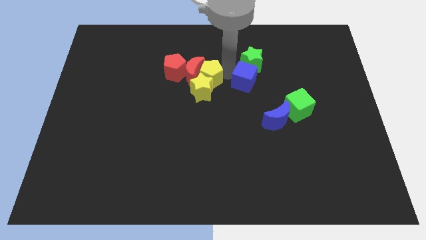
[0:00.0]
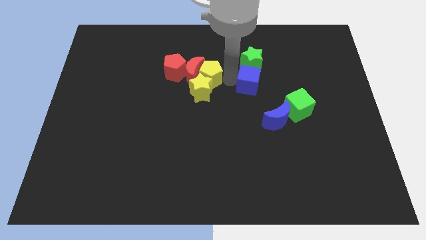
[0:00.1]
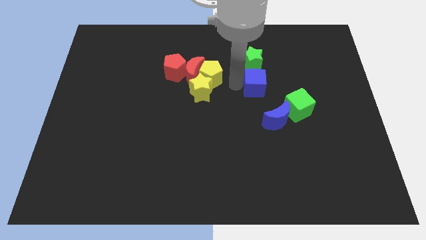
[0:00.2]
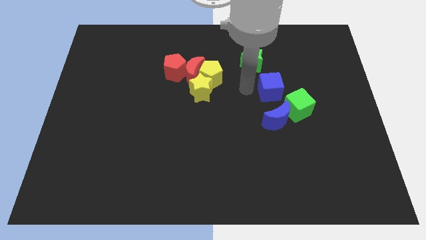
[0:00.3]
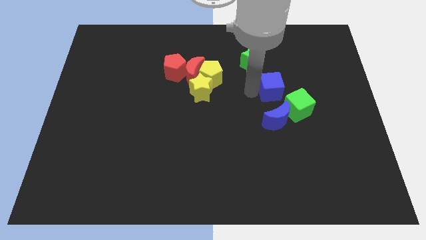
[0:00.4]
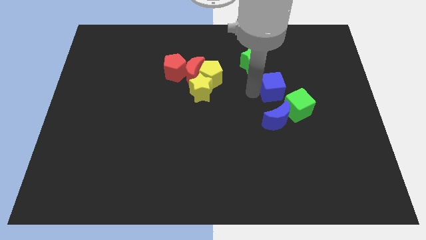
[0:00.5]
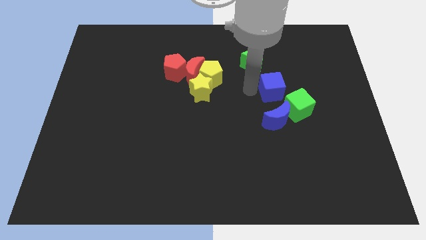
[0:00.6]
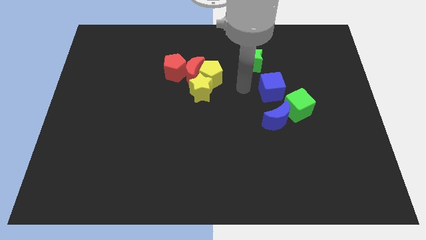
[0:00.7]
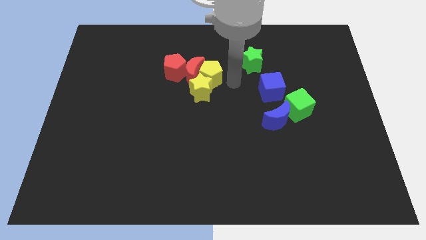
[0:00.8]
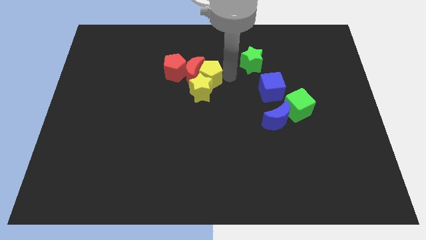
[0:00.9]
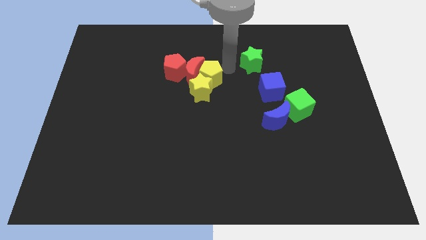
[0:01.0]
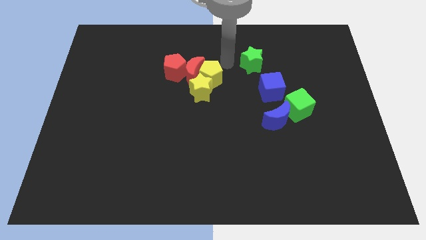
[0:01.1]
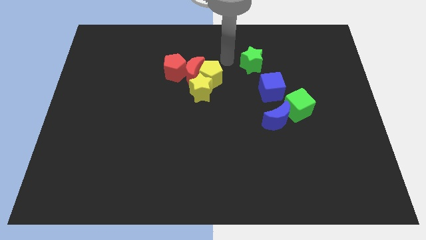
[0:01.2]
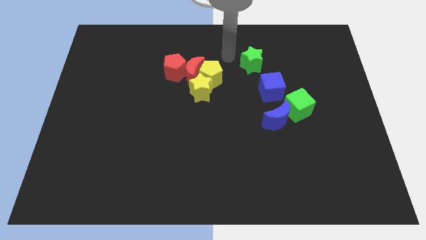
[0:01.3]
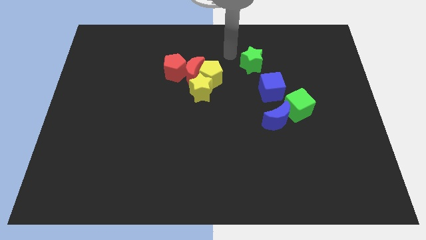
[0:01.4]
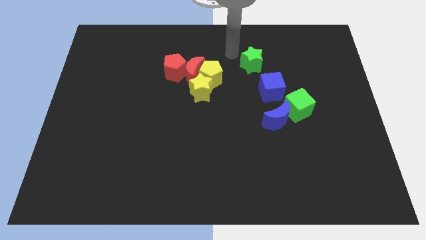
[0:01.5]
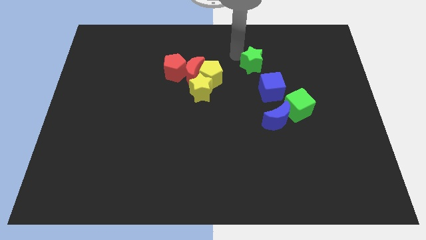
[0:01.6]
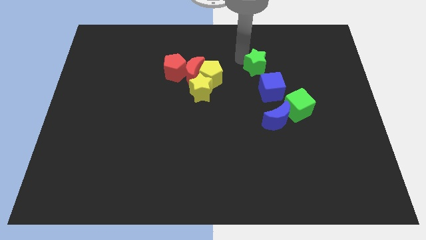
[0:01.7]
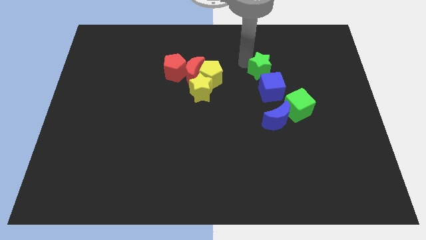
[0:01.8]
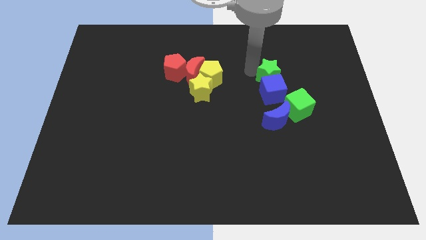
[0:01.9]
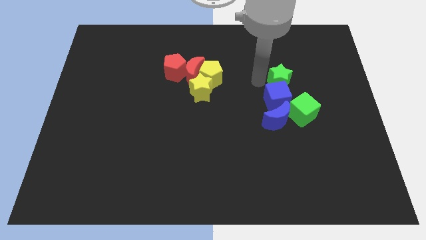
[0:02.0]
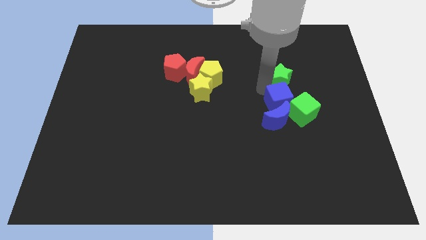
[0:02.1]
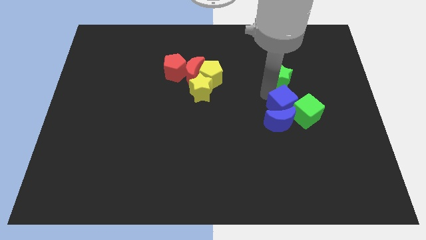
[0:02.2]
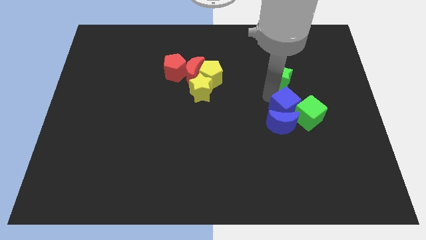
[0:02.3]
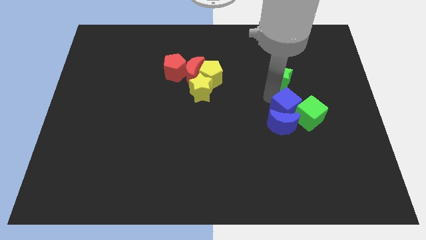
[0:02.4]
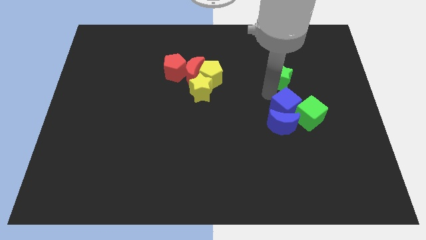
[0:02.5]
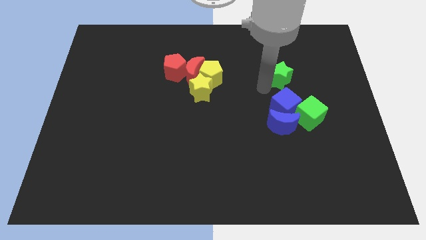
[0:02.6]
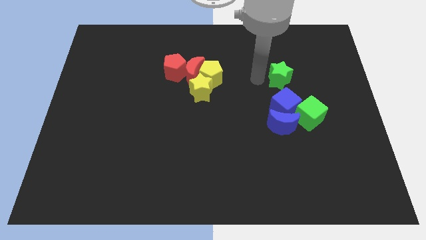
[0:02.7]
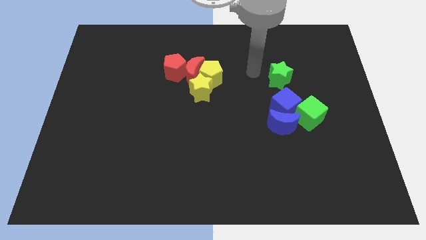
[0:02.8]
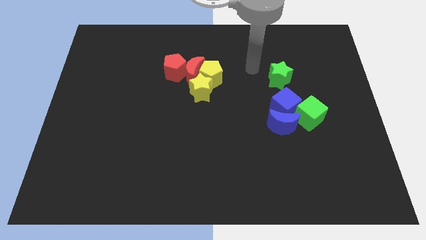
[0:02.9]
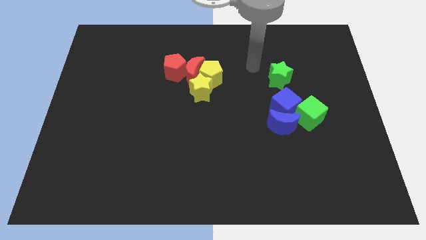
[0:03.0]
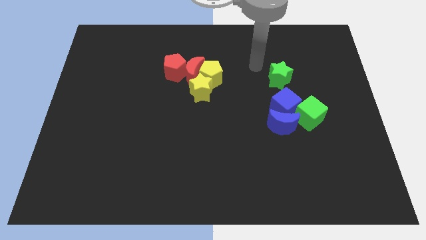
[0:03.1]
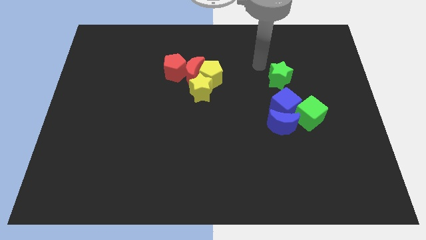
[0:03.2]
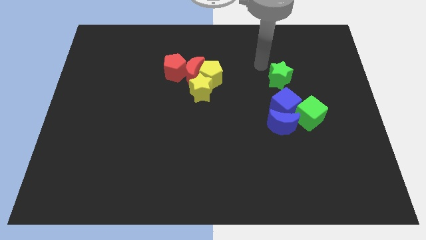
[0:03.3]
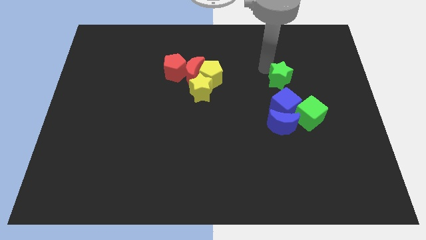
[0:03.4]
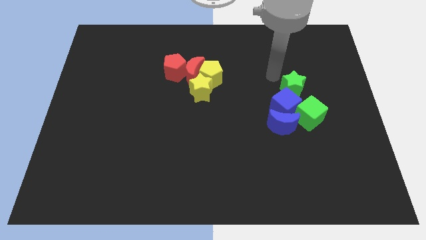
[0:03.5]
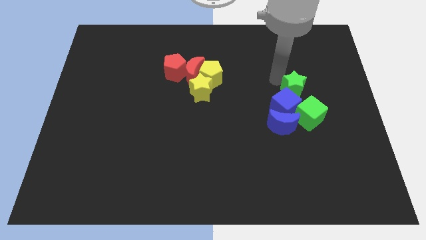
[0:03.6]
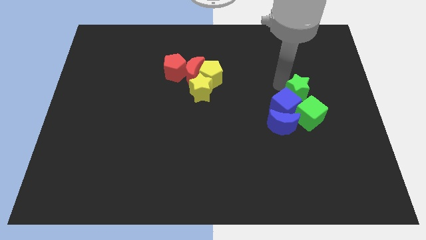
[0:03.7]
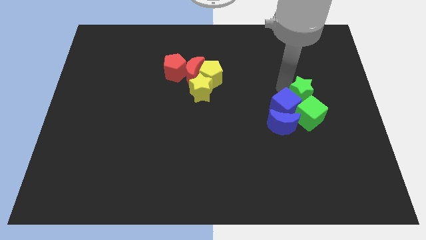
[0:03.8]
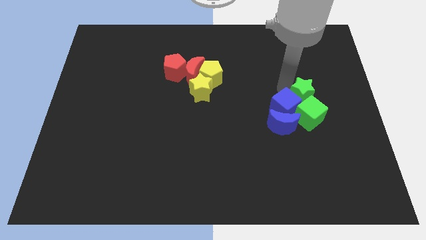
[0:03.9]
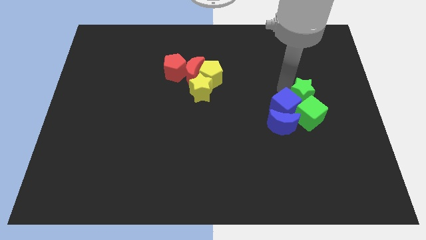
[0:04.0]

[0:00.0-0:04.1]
push the blue cube and green star into the group of blocks

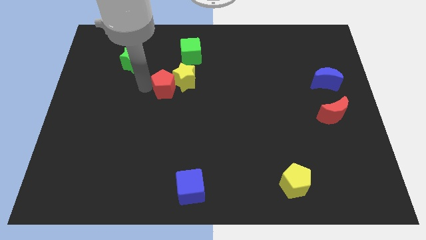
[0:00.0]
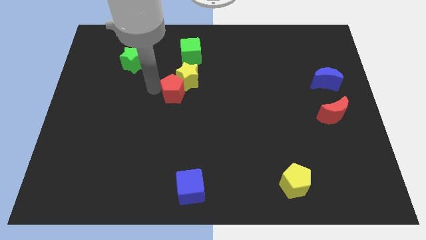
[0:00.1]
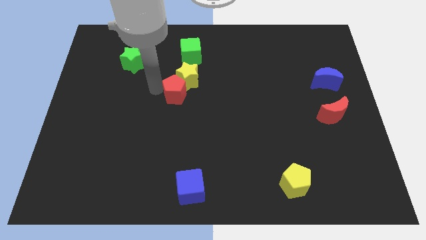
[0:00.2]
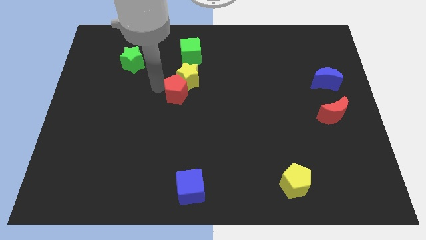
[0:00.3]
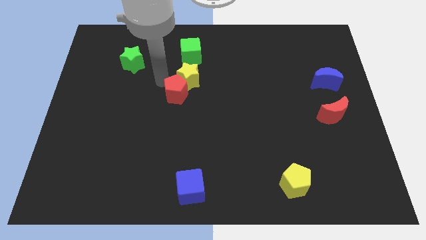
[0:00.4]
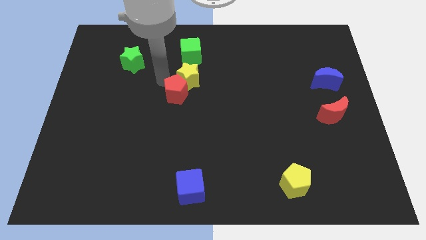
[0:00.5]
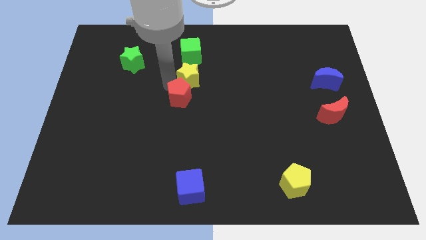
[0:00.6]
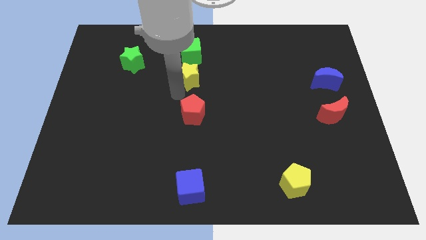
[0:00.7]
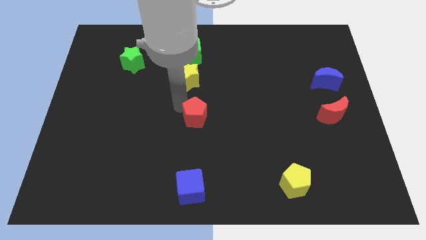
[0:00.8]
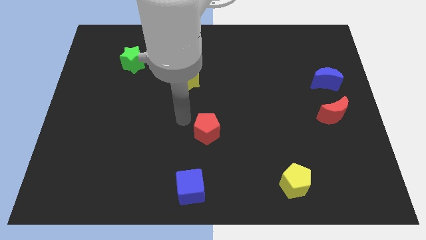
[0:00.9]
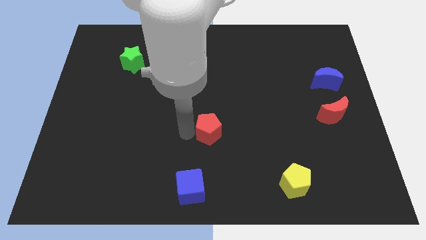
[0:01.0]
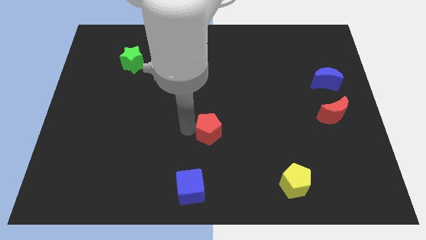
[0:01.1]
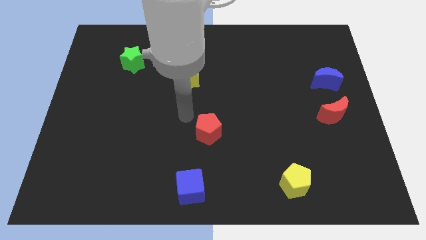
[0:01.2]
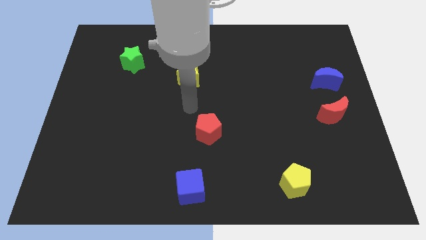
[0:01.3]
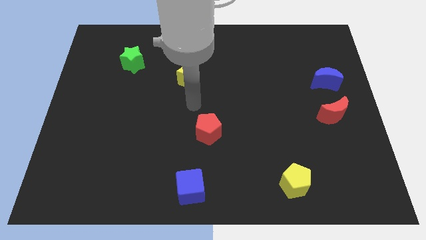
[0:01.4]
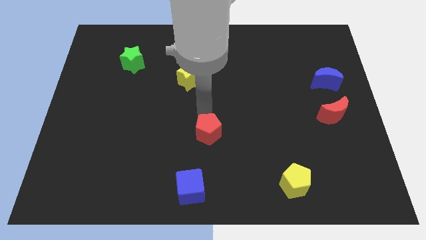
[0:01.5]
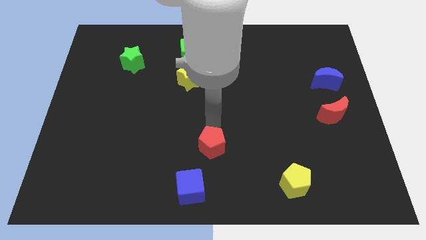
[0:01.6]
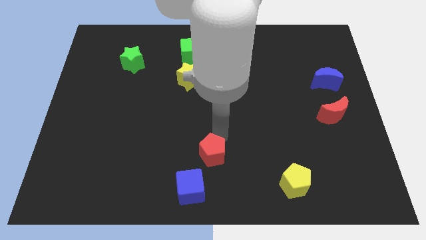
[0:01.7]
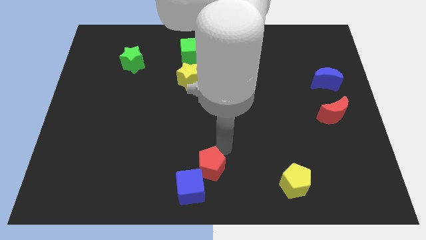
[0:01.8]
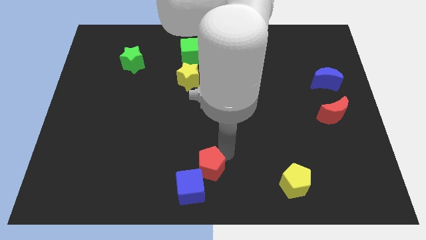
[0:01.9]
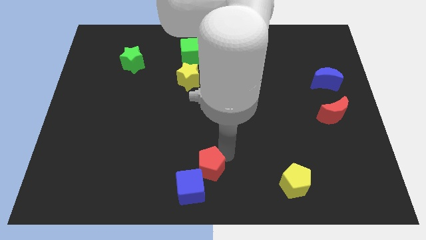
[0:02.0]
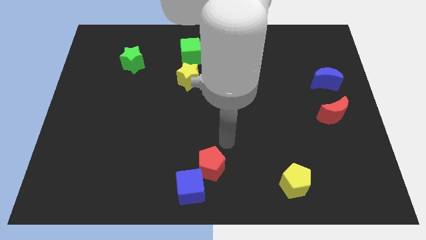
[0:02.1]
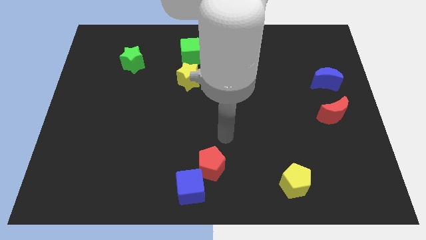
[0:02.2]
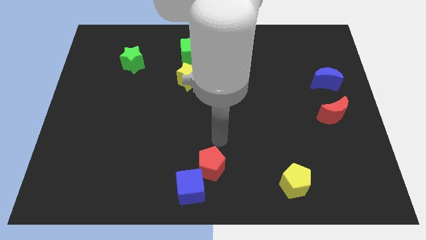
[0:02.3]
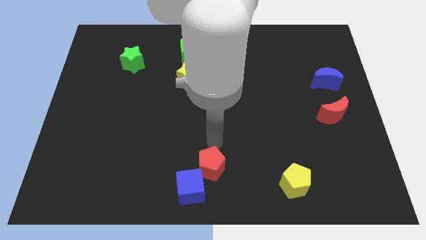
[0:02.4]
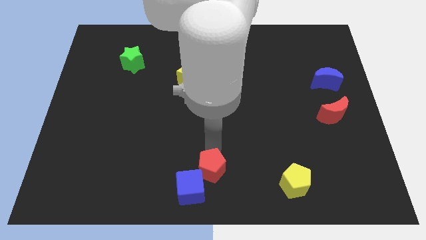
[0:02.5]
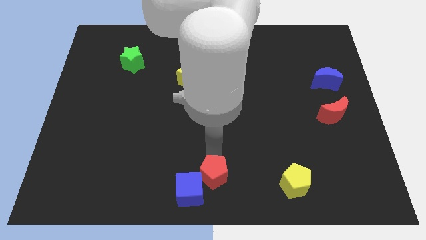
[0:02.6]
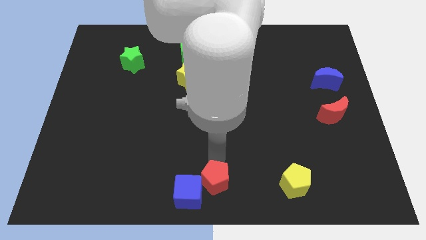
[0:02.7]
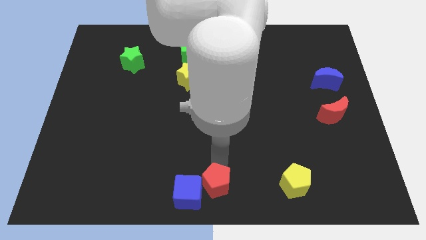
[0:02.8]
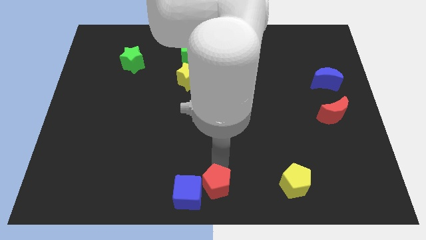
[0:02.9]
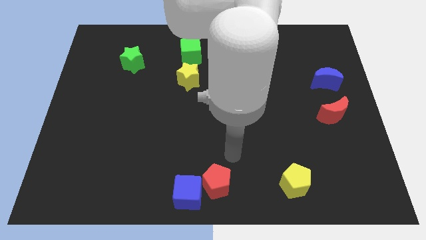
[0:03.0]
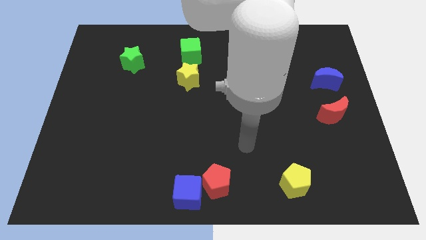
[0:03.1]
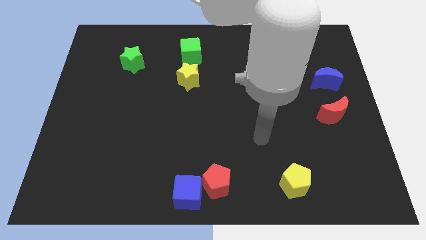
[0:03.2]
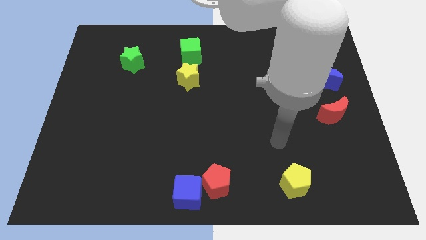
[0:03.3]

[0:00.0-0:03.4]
push the red pentagon into blue square

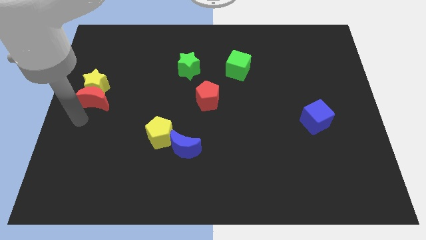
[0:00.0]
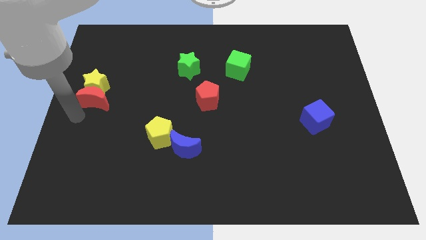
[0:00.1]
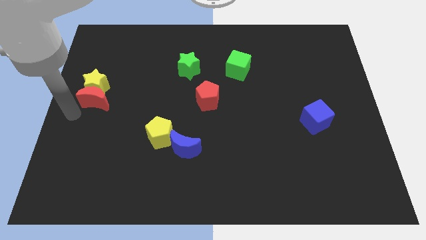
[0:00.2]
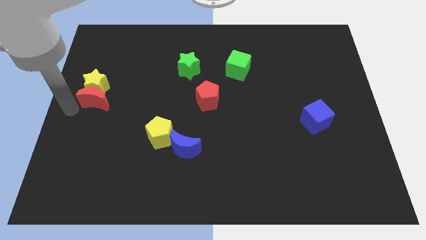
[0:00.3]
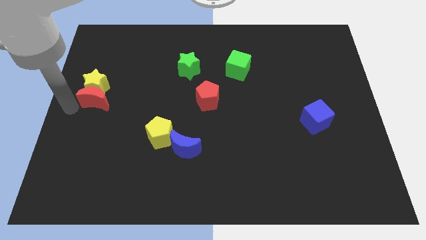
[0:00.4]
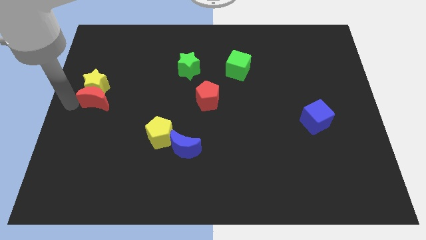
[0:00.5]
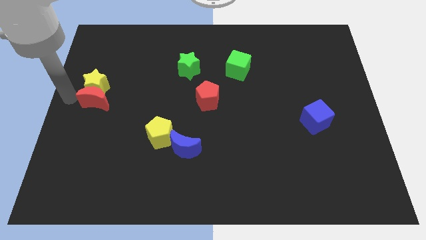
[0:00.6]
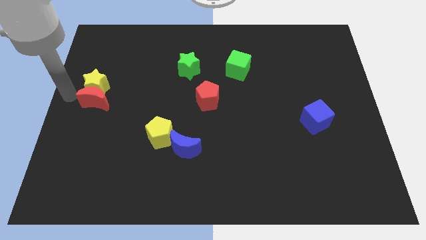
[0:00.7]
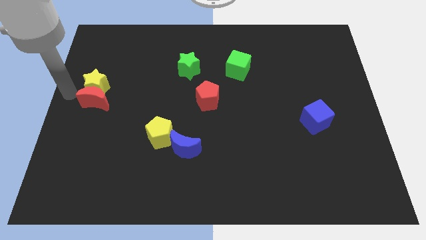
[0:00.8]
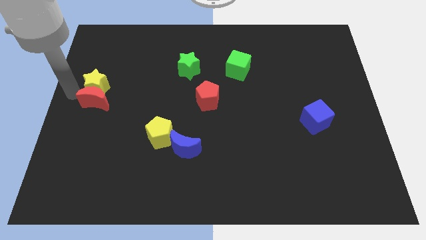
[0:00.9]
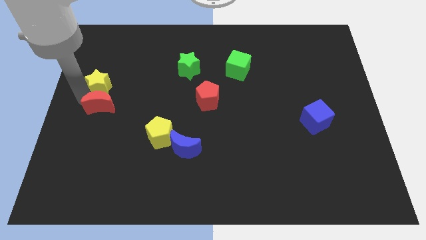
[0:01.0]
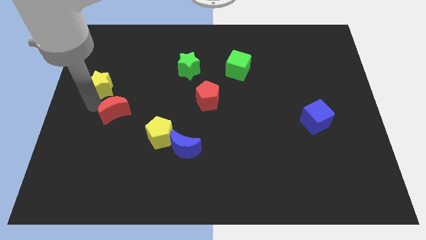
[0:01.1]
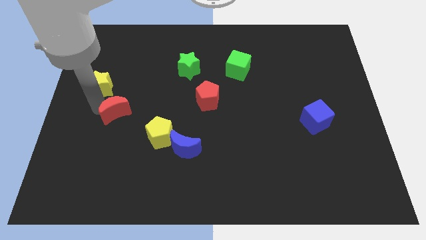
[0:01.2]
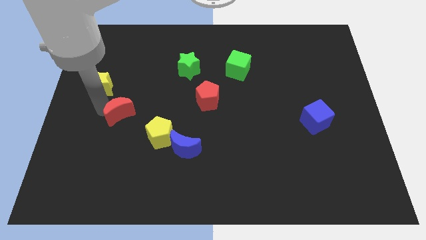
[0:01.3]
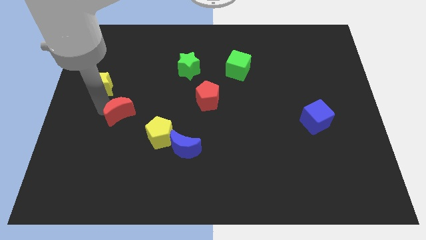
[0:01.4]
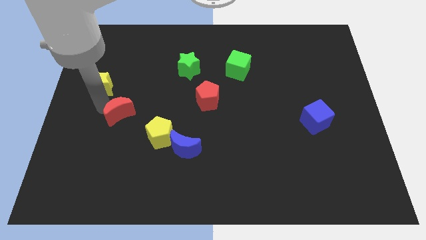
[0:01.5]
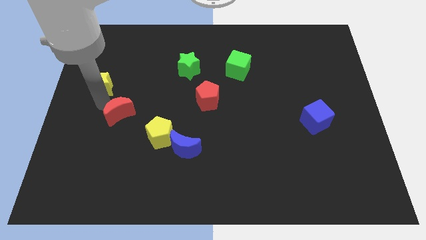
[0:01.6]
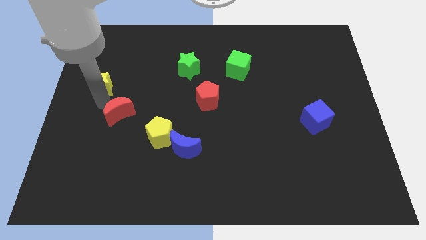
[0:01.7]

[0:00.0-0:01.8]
place the red moon in between the yellow pentagon and the yellow star
